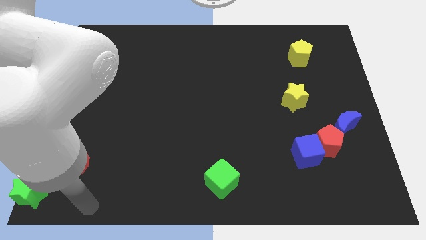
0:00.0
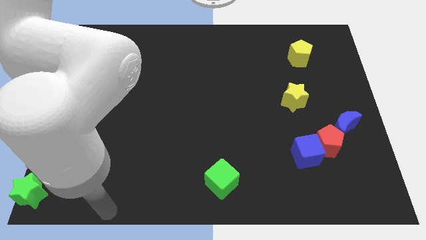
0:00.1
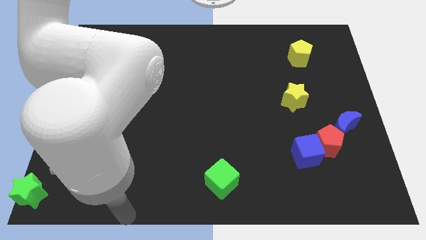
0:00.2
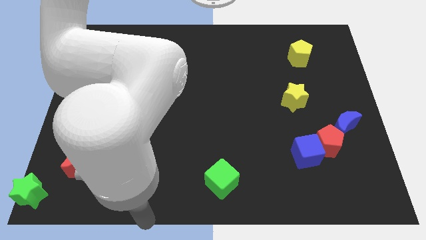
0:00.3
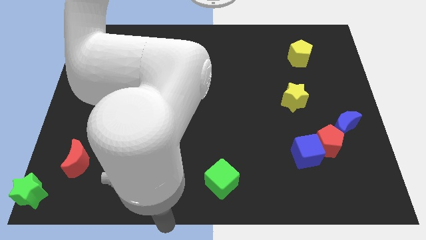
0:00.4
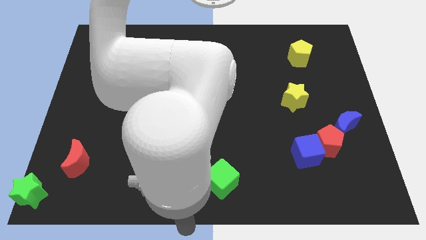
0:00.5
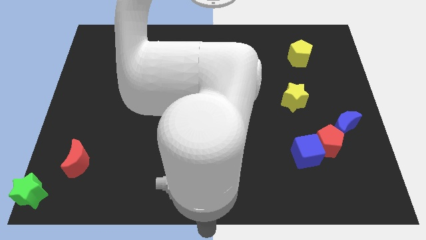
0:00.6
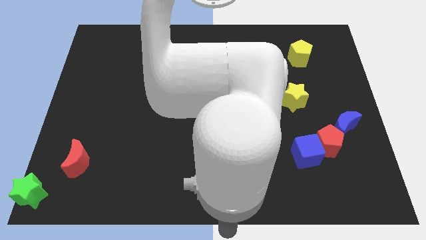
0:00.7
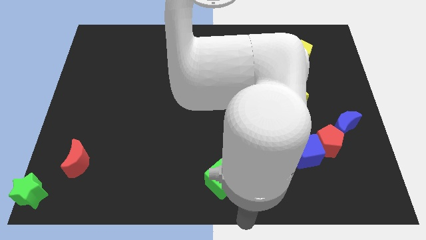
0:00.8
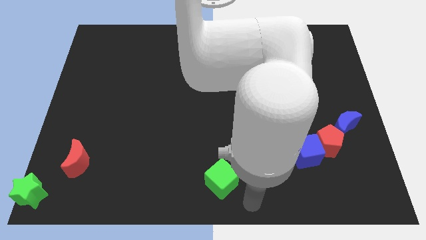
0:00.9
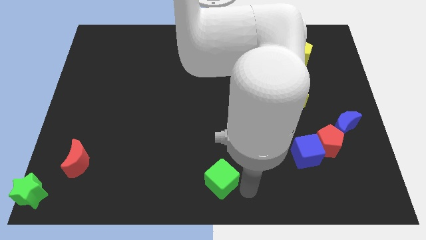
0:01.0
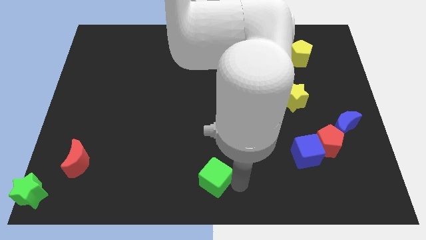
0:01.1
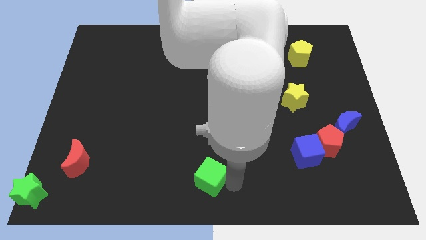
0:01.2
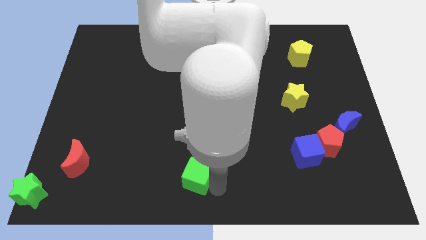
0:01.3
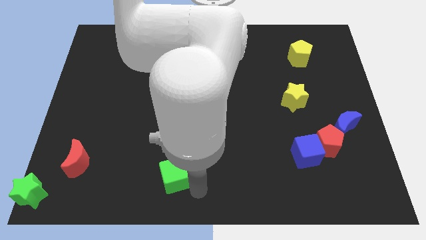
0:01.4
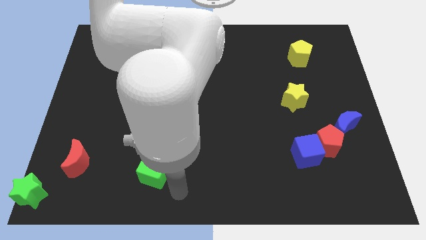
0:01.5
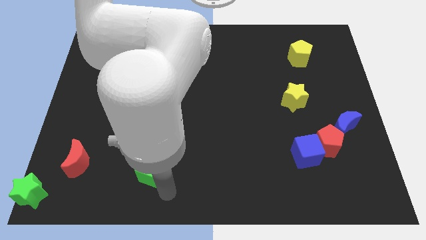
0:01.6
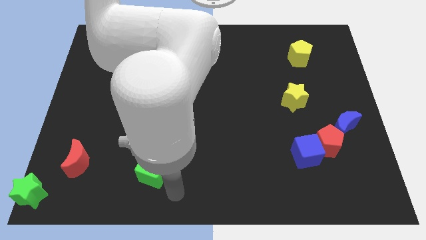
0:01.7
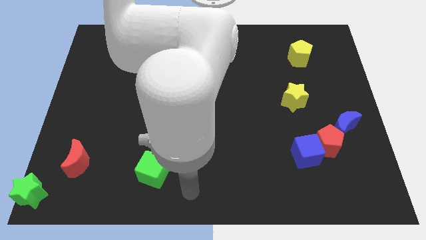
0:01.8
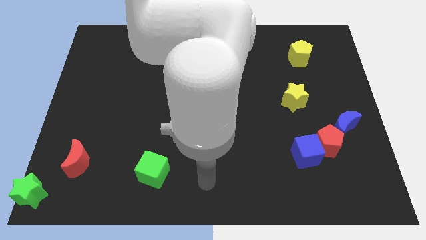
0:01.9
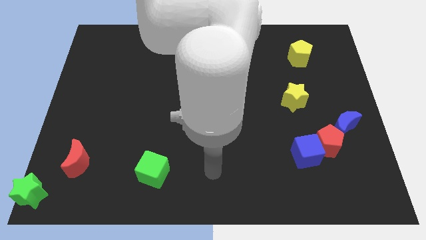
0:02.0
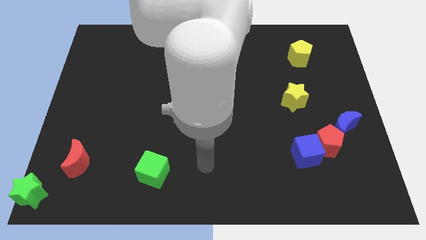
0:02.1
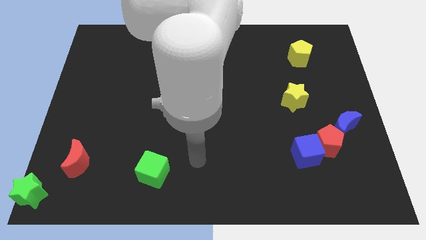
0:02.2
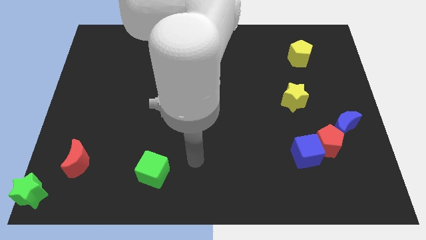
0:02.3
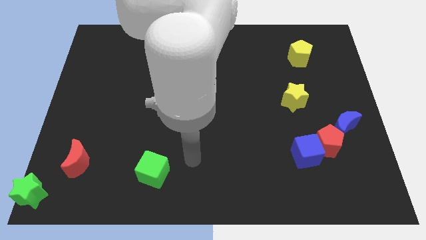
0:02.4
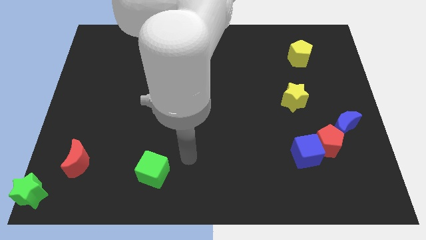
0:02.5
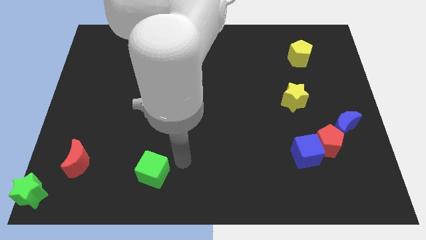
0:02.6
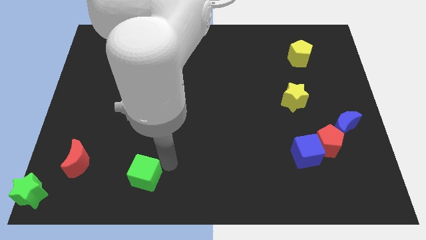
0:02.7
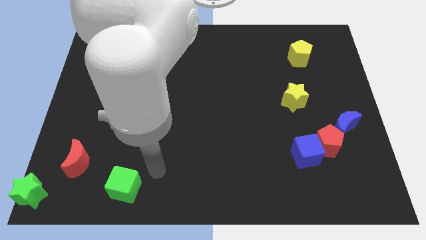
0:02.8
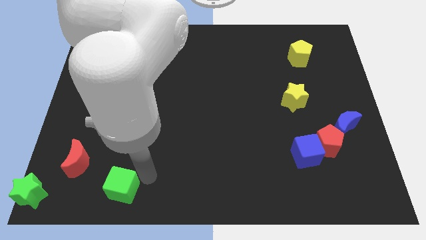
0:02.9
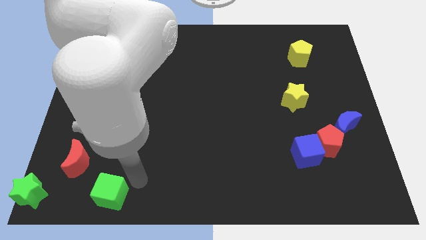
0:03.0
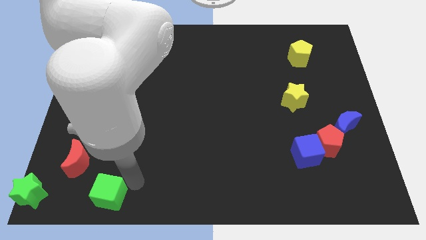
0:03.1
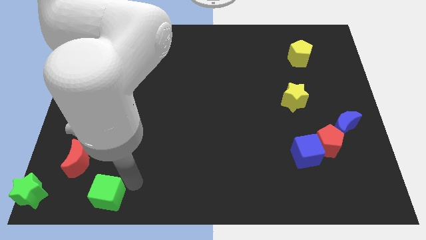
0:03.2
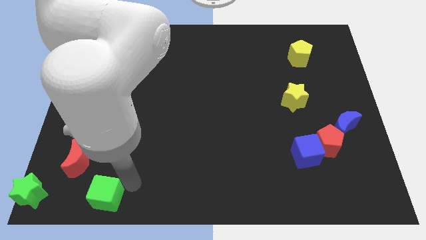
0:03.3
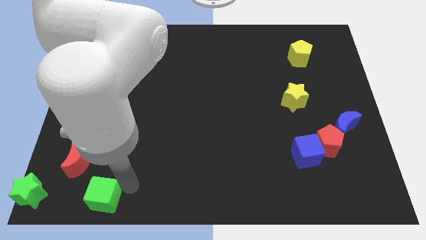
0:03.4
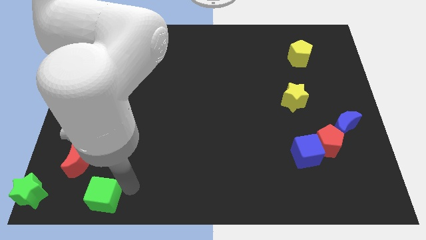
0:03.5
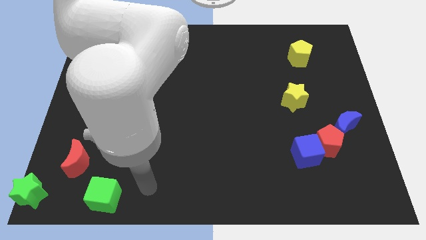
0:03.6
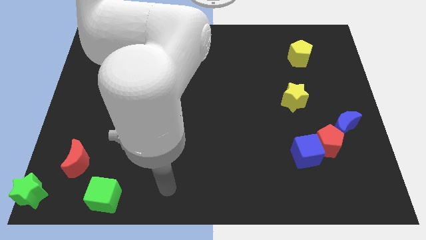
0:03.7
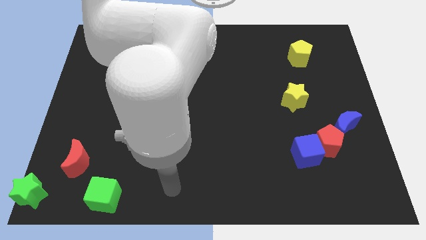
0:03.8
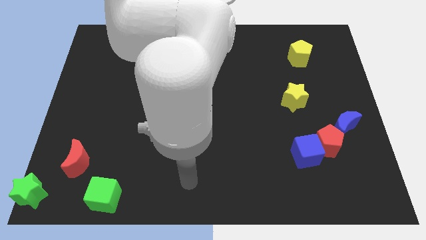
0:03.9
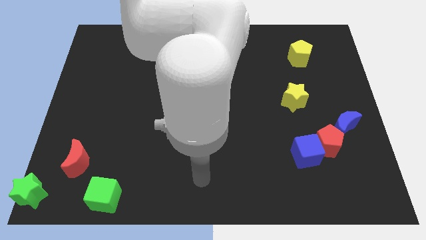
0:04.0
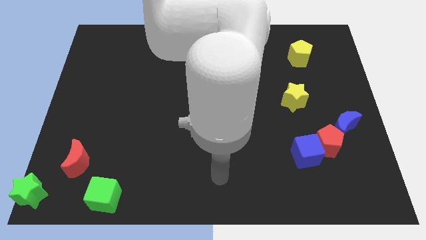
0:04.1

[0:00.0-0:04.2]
place the green cube below the red moon

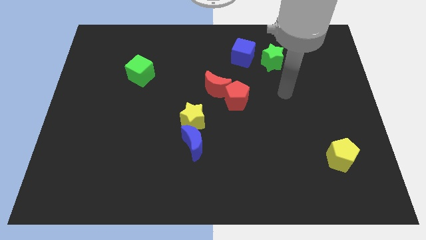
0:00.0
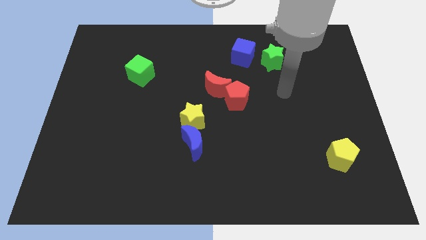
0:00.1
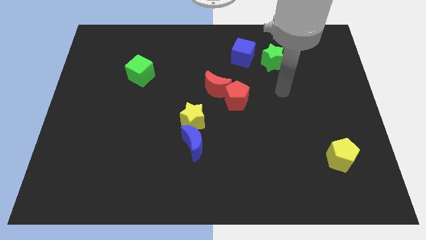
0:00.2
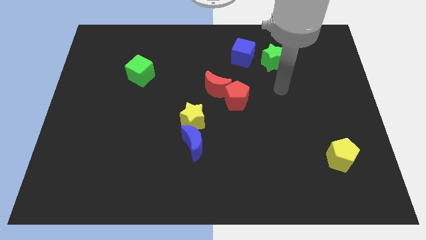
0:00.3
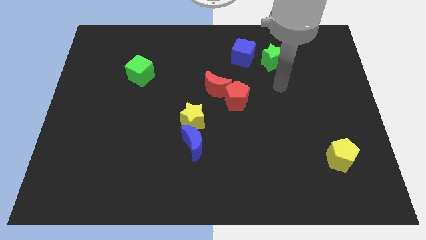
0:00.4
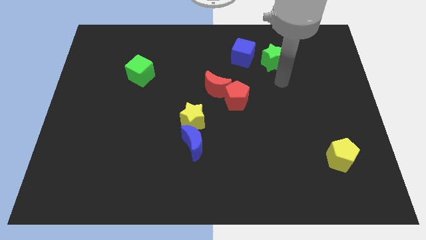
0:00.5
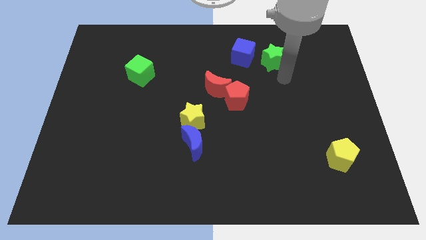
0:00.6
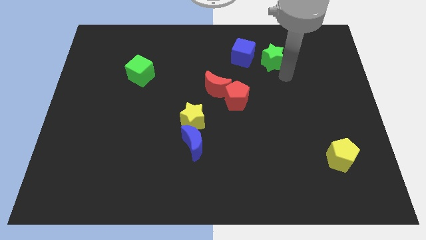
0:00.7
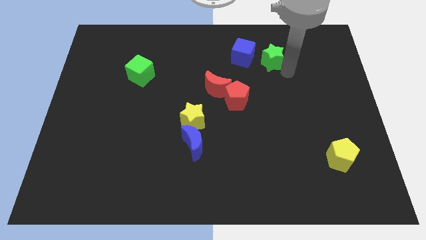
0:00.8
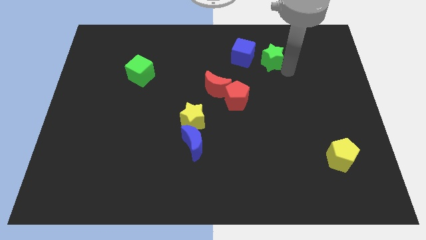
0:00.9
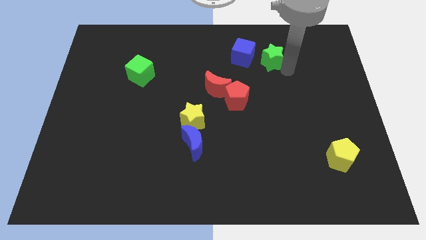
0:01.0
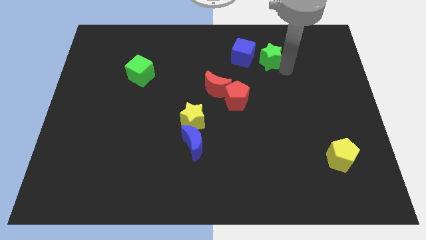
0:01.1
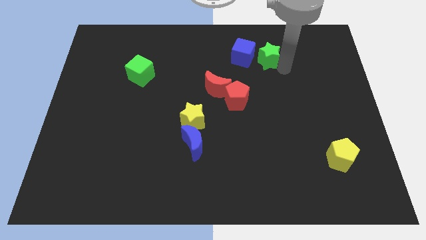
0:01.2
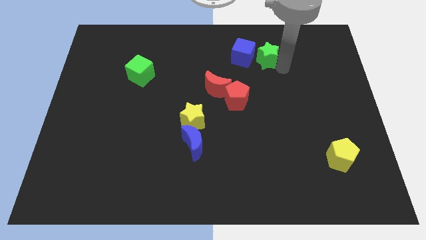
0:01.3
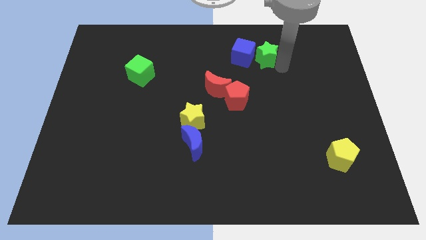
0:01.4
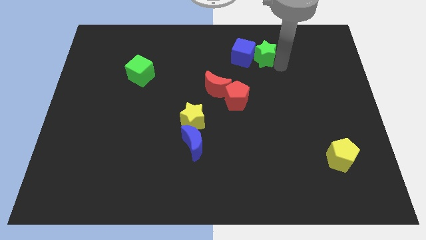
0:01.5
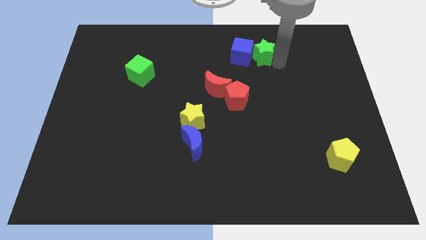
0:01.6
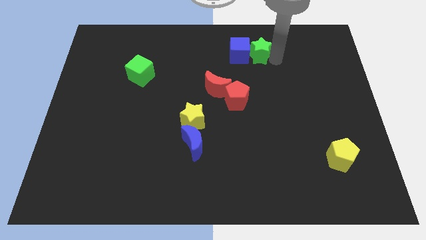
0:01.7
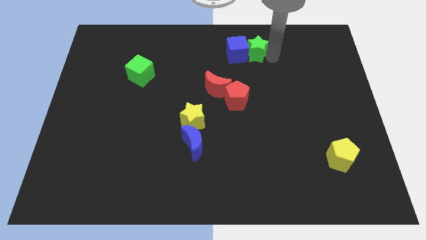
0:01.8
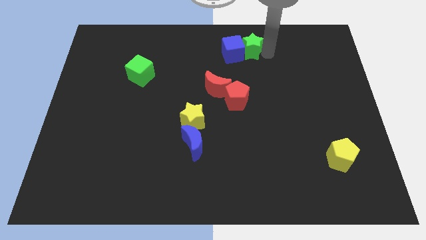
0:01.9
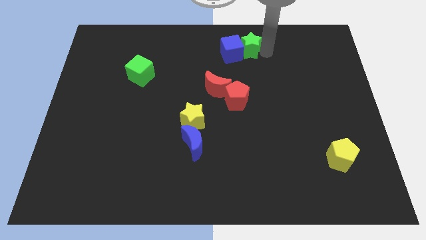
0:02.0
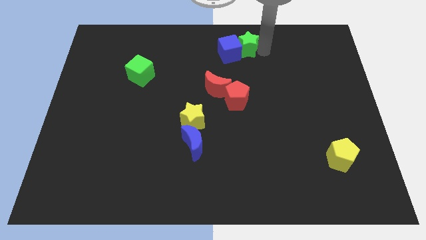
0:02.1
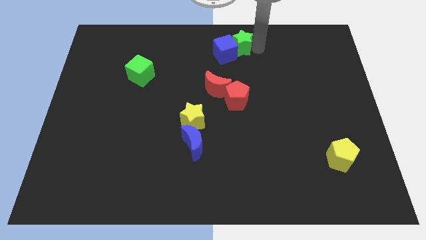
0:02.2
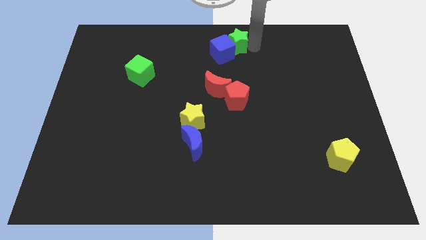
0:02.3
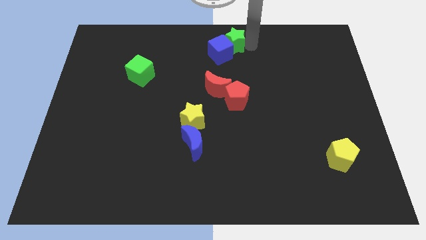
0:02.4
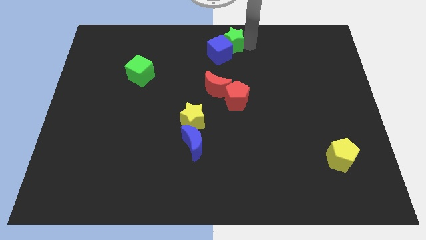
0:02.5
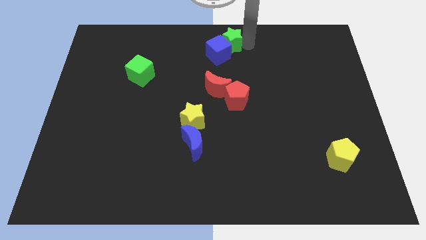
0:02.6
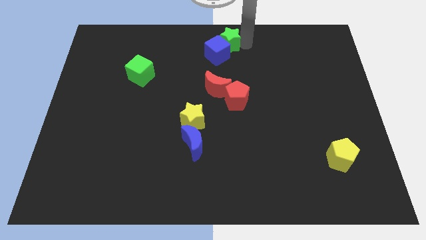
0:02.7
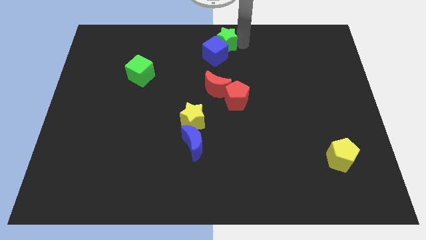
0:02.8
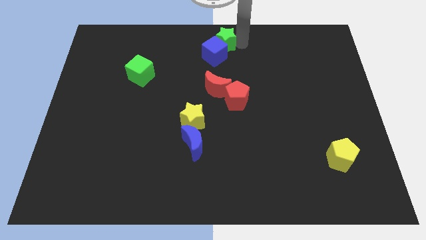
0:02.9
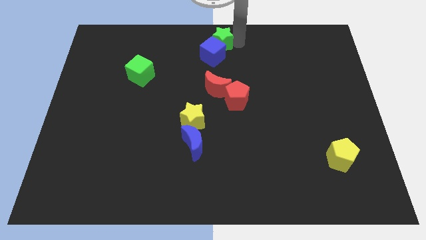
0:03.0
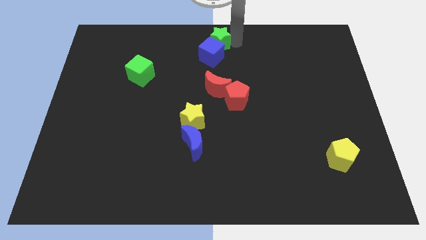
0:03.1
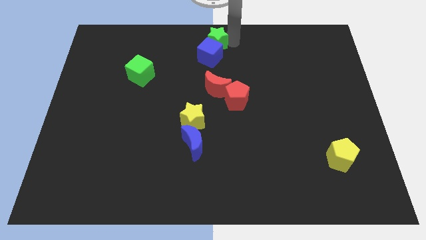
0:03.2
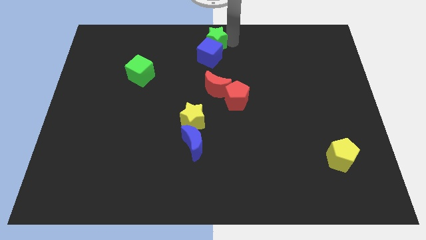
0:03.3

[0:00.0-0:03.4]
push green star in to blue cube

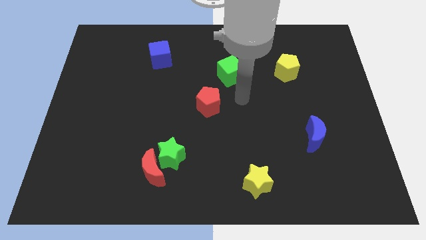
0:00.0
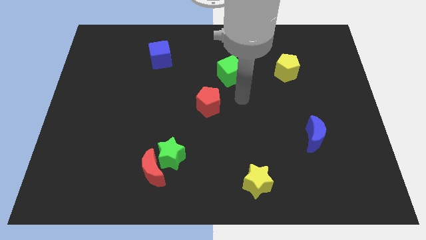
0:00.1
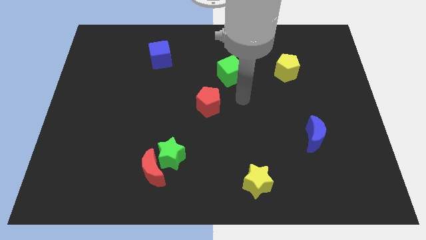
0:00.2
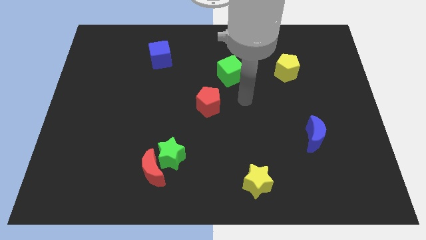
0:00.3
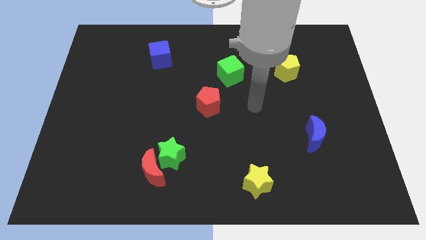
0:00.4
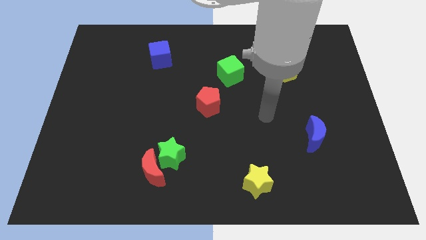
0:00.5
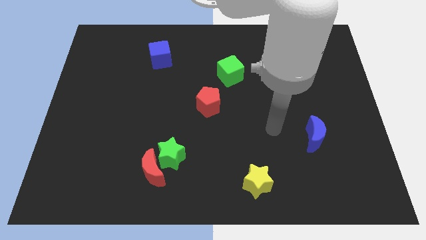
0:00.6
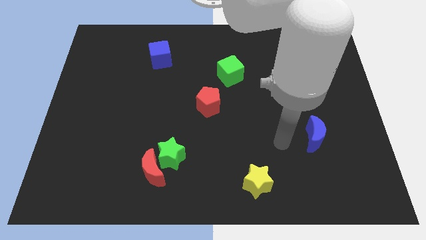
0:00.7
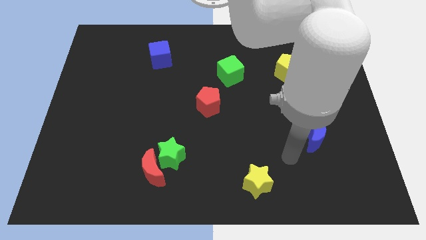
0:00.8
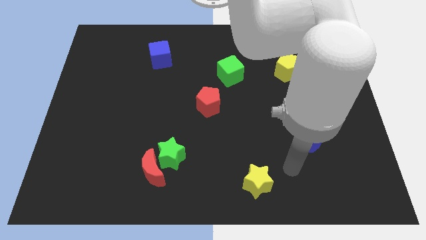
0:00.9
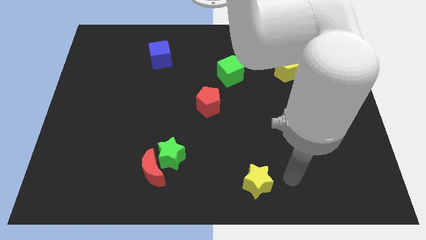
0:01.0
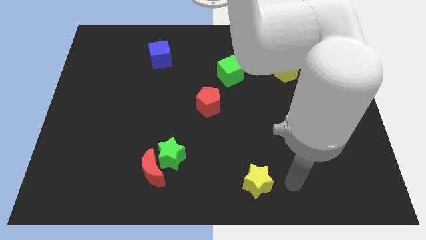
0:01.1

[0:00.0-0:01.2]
move your arm to the bottom center

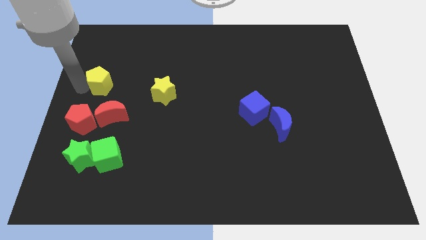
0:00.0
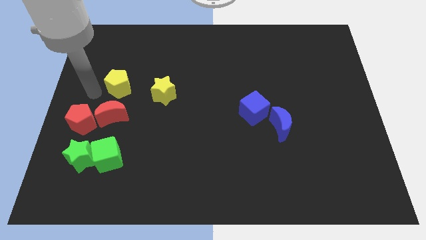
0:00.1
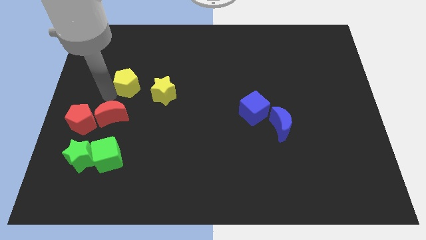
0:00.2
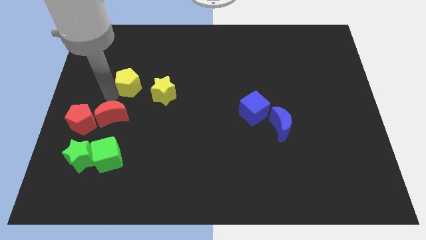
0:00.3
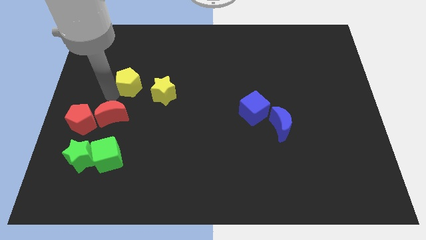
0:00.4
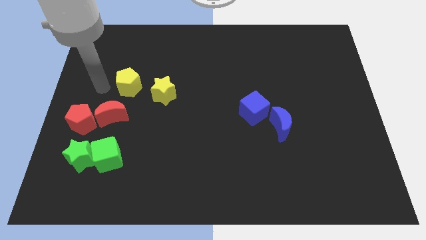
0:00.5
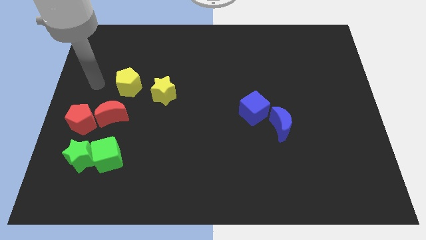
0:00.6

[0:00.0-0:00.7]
move the yellow pentagon to the left of the yellow star
